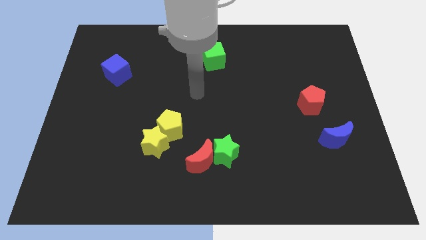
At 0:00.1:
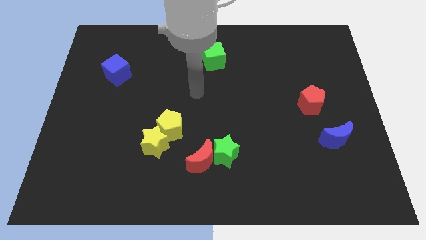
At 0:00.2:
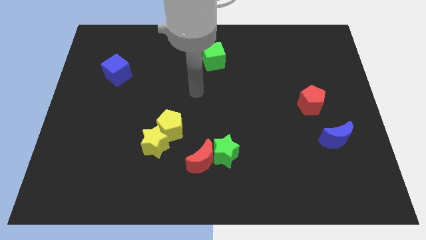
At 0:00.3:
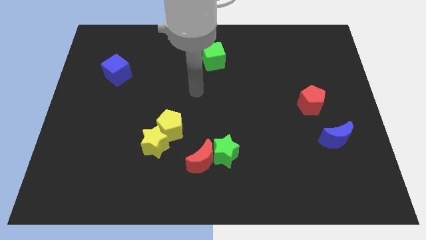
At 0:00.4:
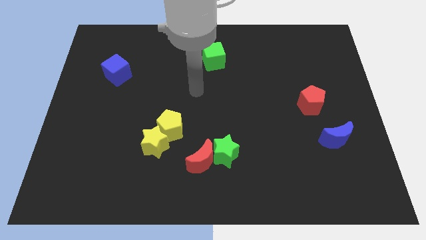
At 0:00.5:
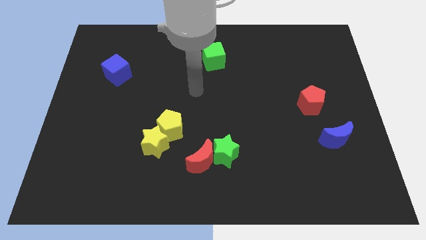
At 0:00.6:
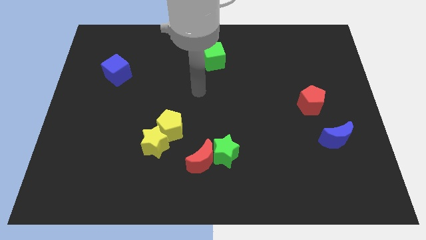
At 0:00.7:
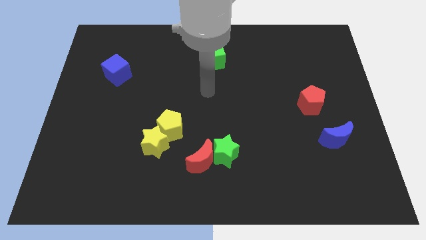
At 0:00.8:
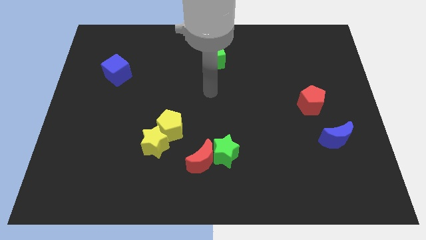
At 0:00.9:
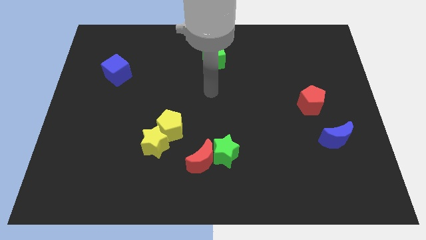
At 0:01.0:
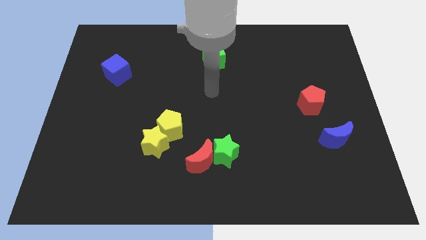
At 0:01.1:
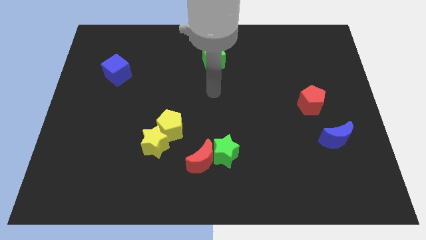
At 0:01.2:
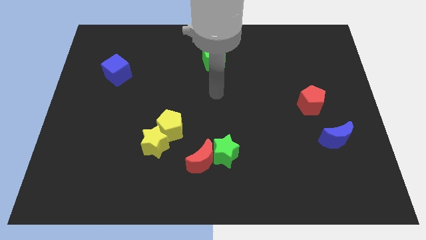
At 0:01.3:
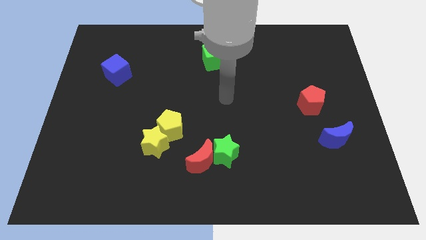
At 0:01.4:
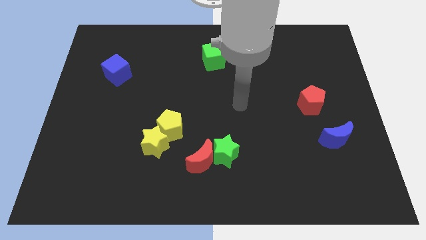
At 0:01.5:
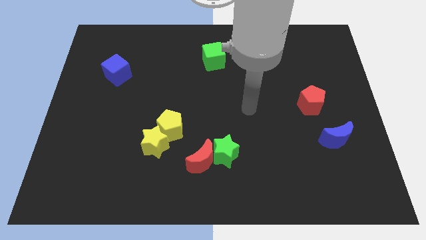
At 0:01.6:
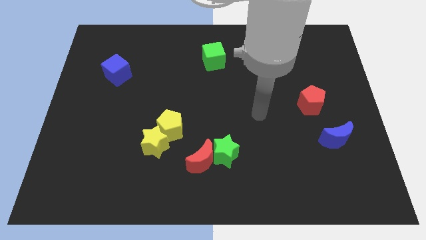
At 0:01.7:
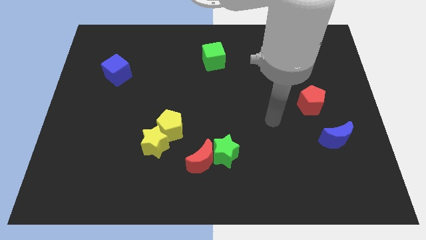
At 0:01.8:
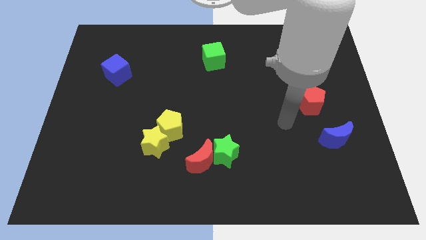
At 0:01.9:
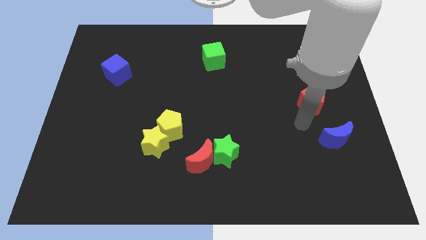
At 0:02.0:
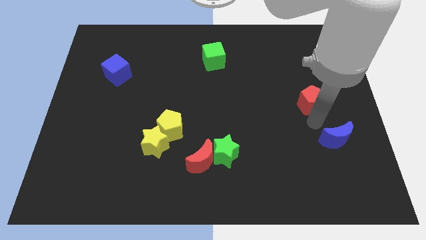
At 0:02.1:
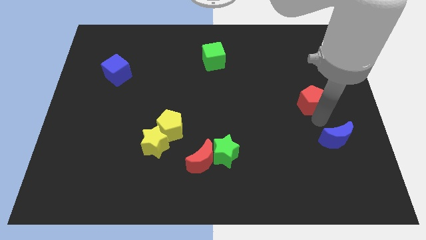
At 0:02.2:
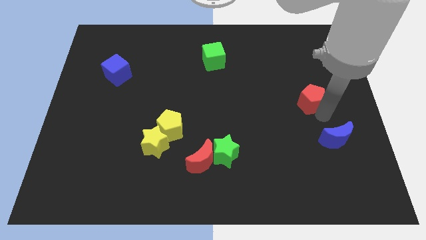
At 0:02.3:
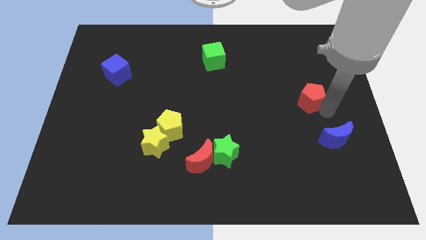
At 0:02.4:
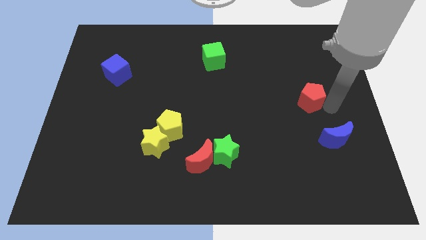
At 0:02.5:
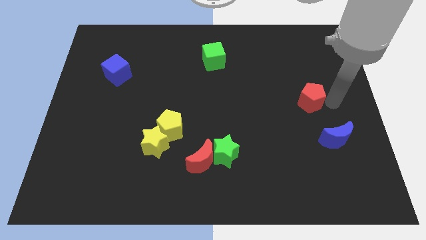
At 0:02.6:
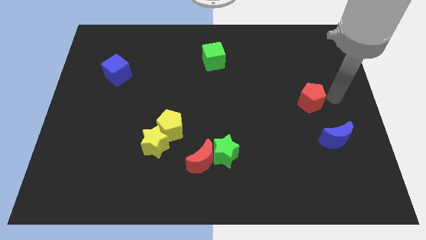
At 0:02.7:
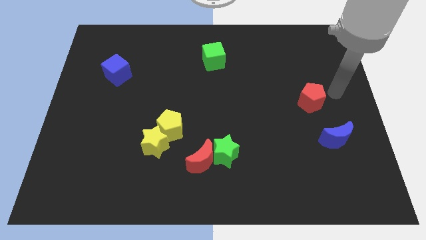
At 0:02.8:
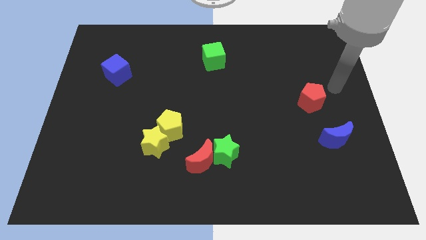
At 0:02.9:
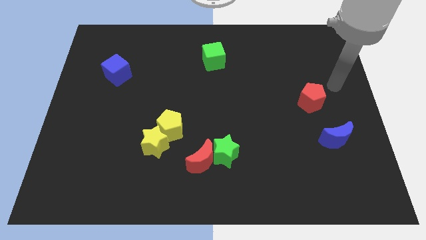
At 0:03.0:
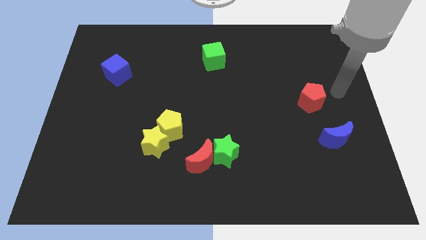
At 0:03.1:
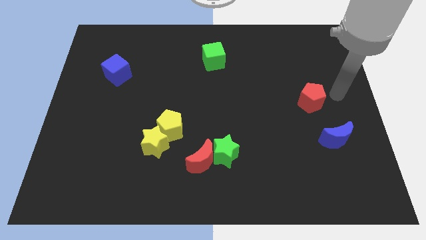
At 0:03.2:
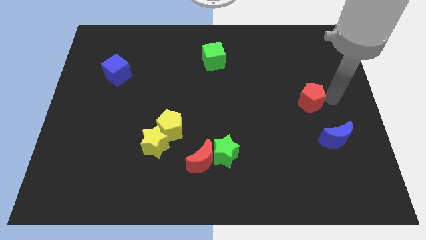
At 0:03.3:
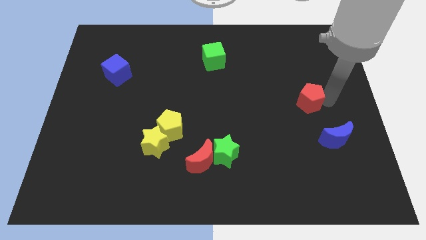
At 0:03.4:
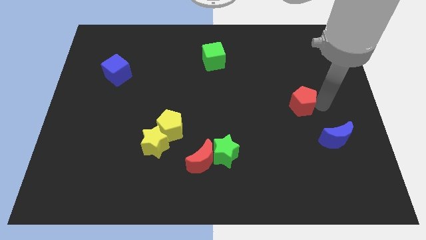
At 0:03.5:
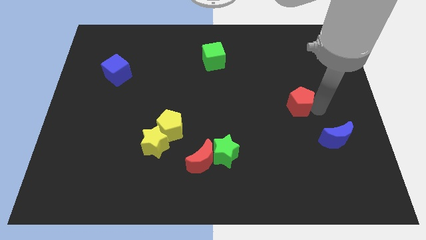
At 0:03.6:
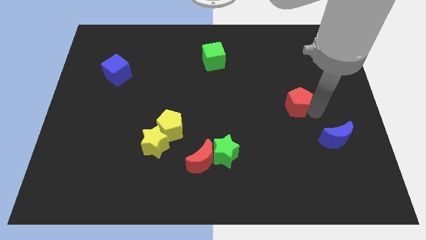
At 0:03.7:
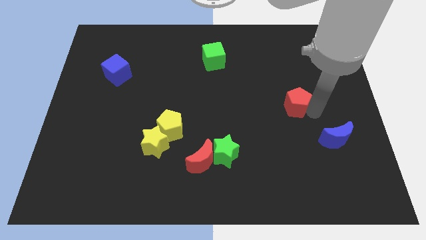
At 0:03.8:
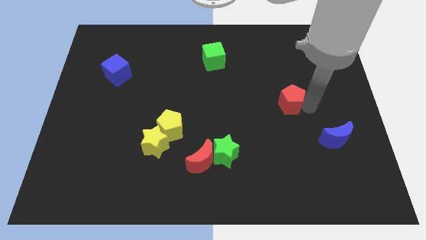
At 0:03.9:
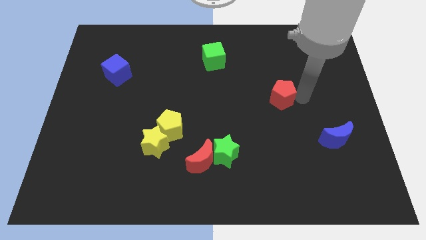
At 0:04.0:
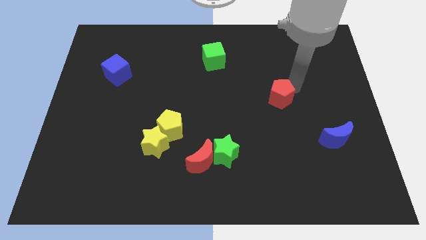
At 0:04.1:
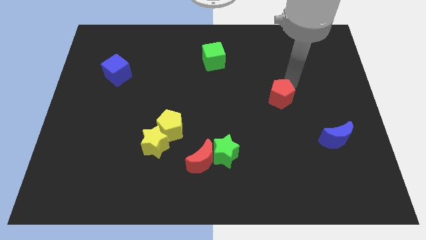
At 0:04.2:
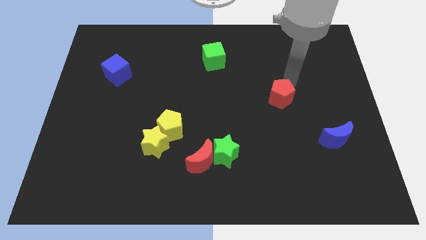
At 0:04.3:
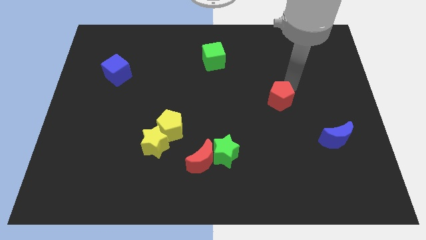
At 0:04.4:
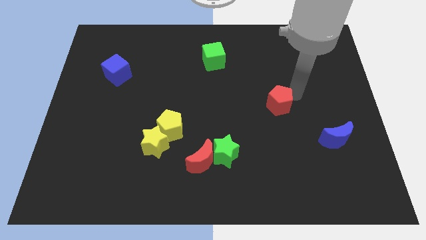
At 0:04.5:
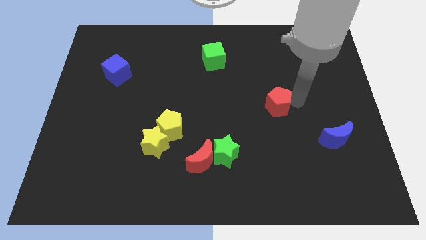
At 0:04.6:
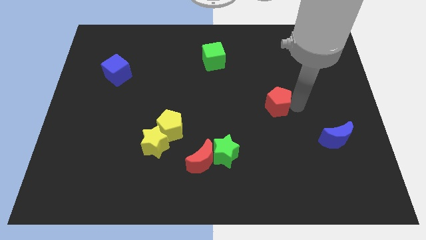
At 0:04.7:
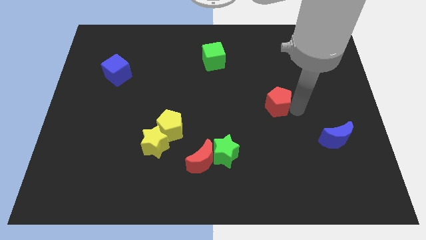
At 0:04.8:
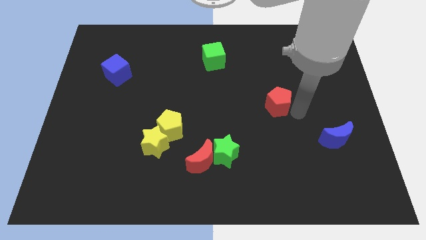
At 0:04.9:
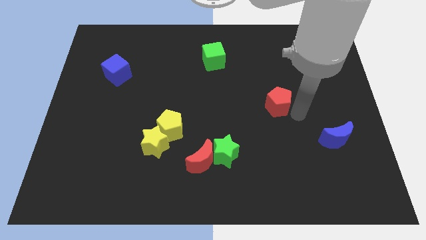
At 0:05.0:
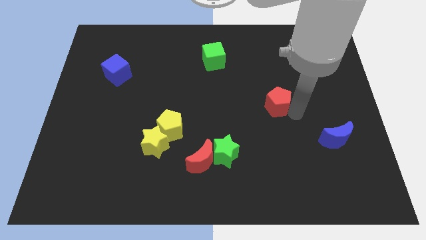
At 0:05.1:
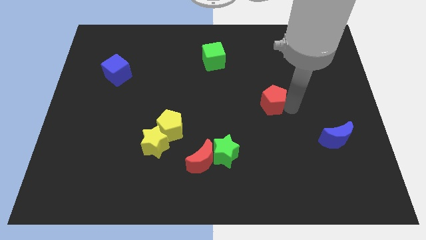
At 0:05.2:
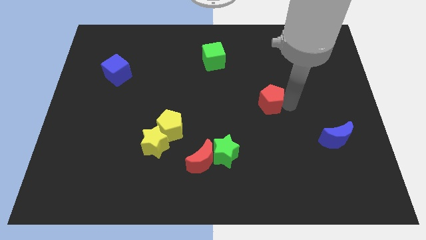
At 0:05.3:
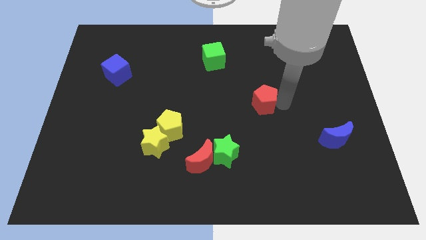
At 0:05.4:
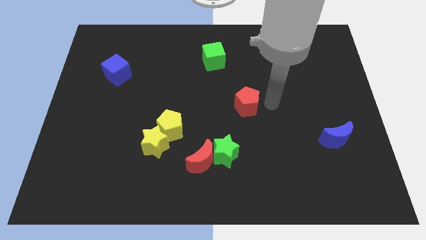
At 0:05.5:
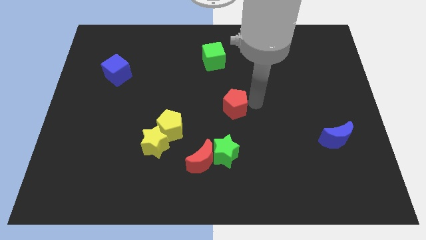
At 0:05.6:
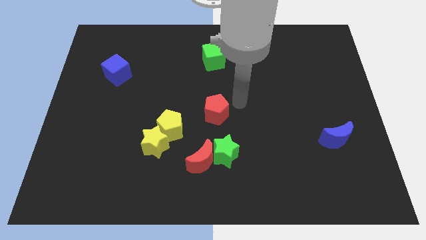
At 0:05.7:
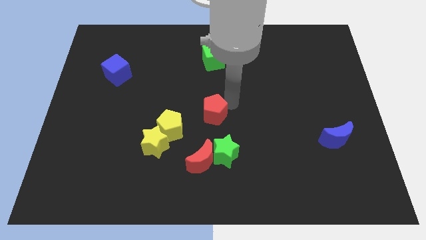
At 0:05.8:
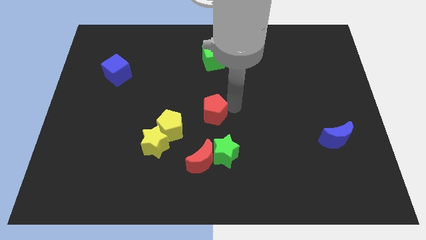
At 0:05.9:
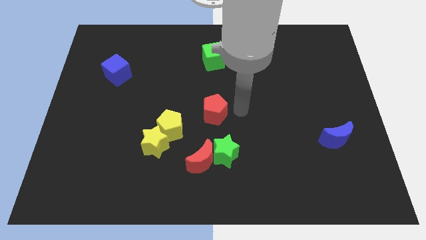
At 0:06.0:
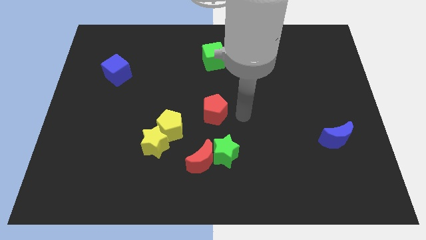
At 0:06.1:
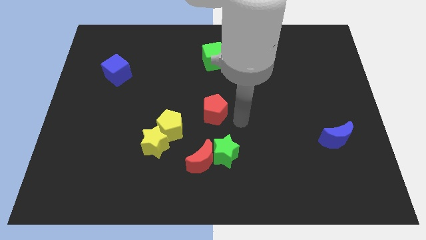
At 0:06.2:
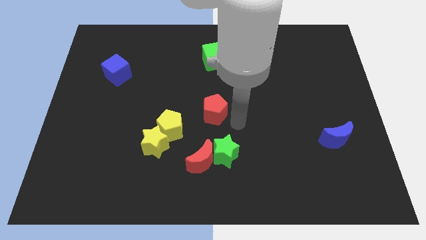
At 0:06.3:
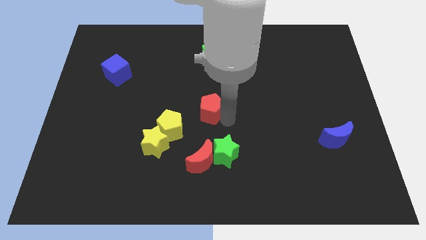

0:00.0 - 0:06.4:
move the red pentagon to the center

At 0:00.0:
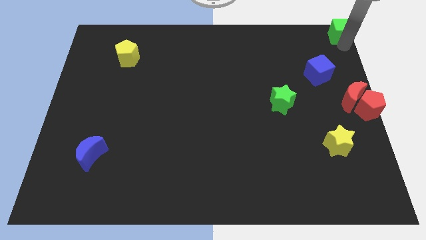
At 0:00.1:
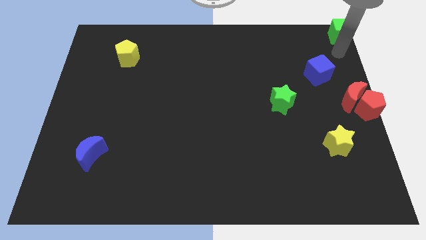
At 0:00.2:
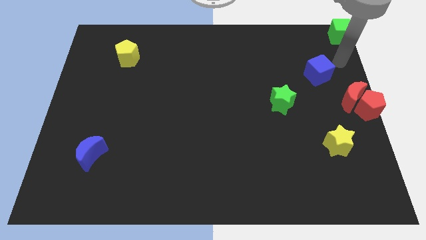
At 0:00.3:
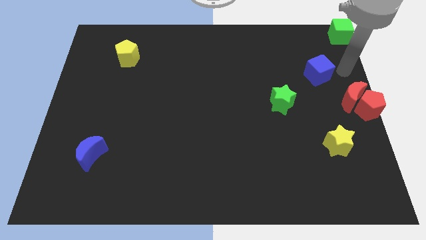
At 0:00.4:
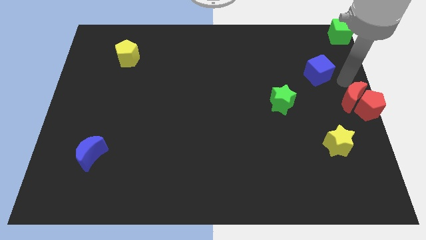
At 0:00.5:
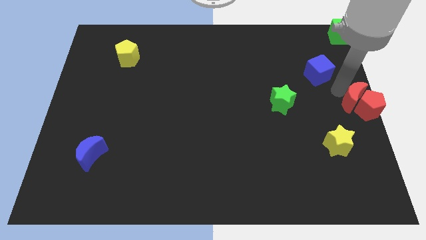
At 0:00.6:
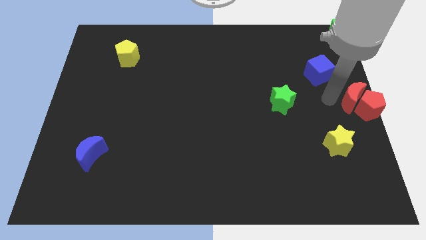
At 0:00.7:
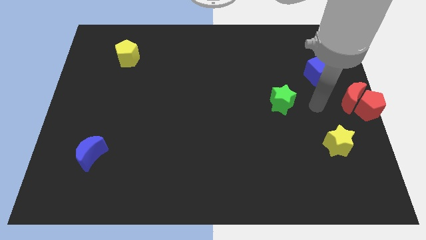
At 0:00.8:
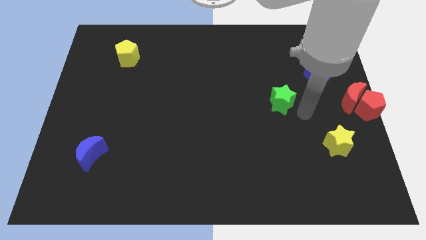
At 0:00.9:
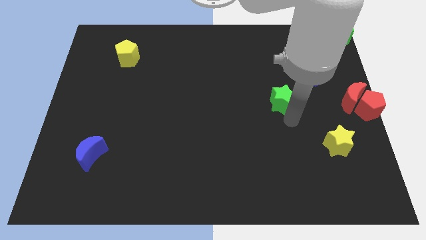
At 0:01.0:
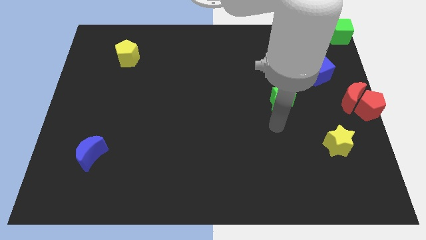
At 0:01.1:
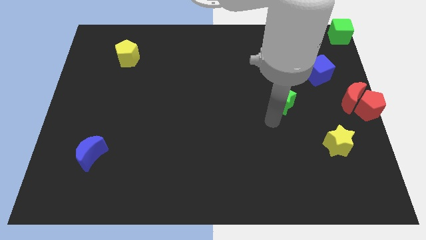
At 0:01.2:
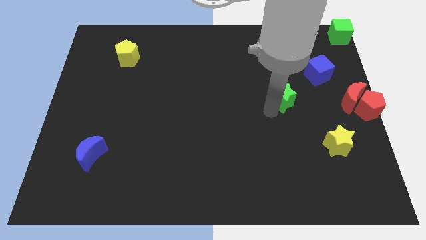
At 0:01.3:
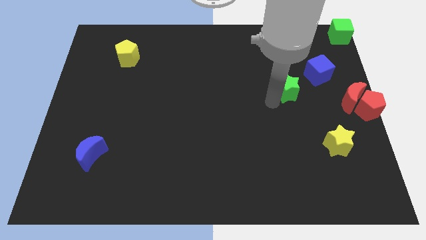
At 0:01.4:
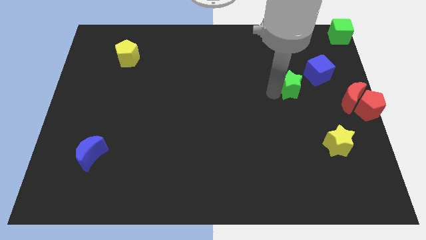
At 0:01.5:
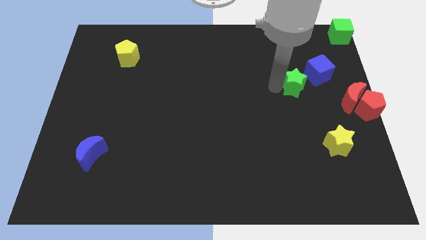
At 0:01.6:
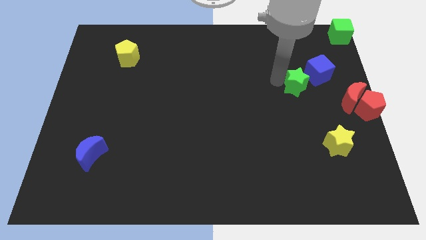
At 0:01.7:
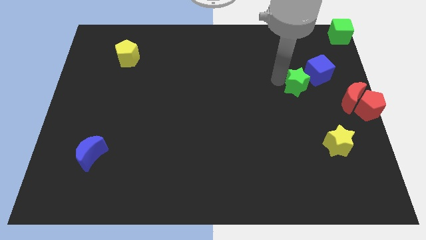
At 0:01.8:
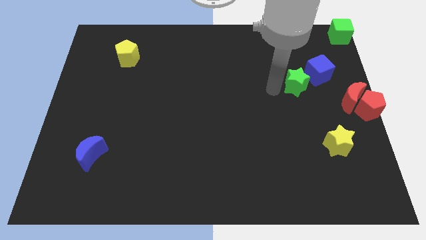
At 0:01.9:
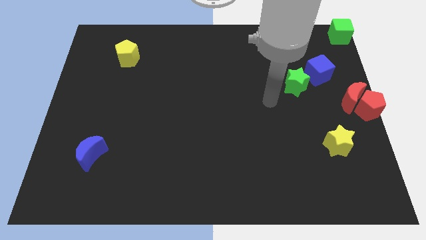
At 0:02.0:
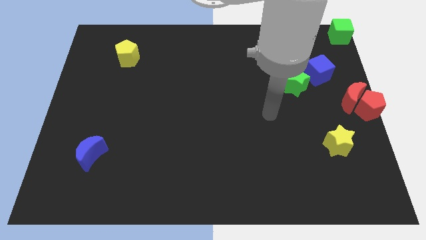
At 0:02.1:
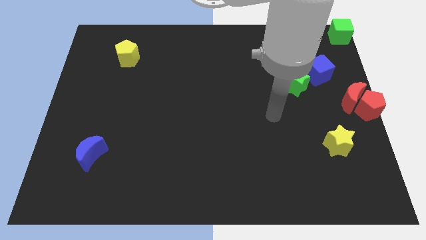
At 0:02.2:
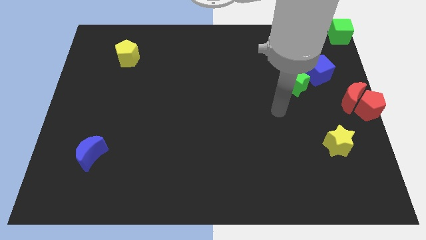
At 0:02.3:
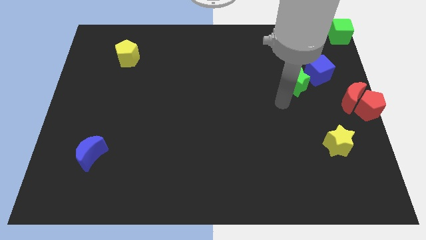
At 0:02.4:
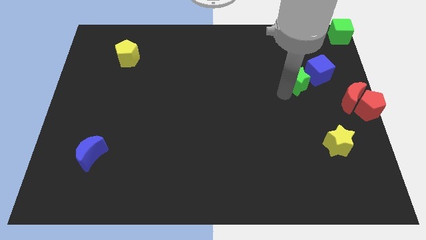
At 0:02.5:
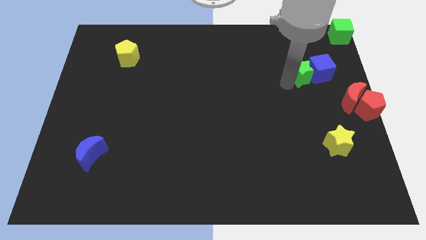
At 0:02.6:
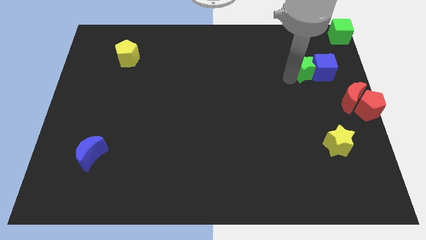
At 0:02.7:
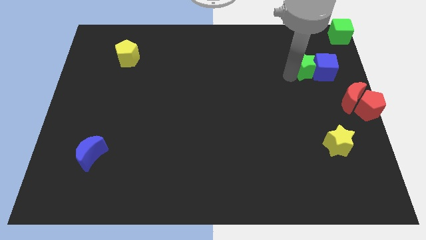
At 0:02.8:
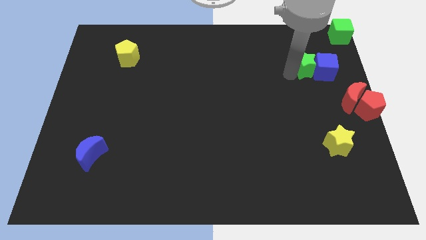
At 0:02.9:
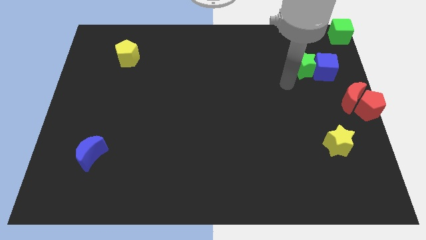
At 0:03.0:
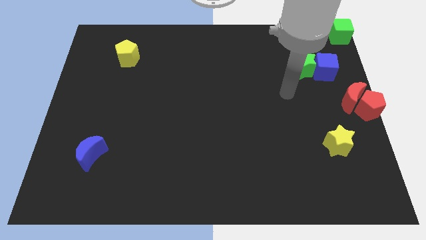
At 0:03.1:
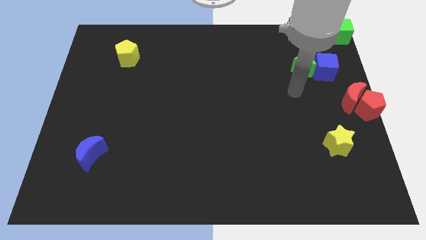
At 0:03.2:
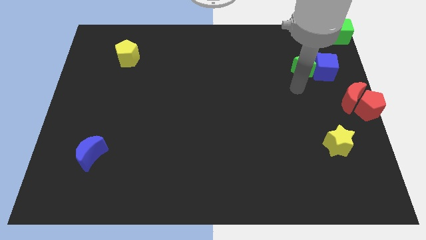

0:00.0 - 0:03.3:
slightly move the green star into the left side of the blue cube
